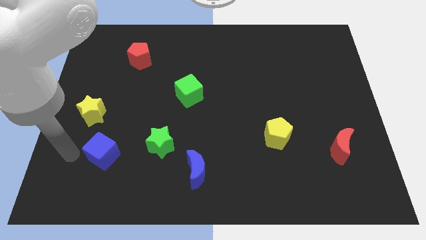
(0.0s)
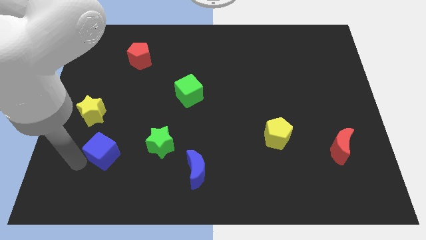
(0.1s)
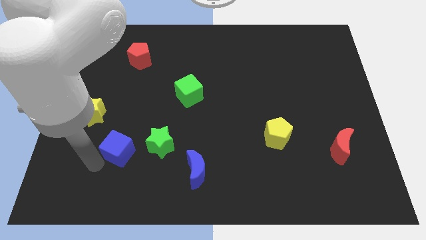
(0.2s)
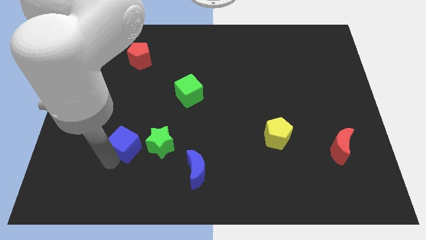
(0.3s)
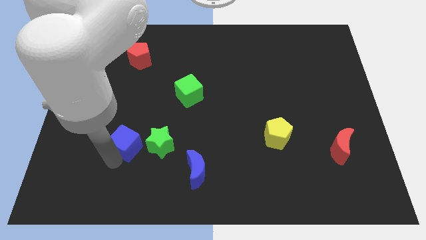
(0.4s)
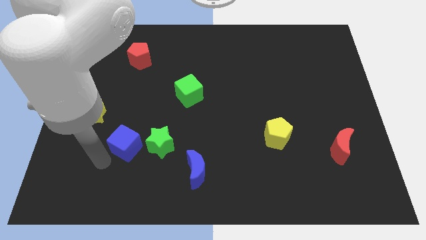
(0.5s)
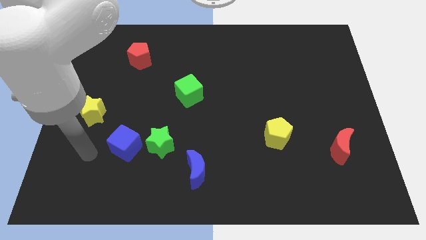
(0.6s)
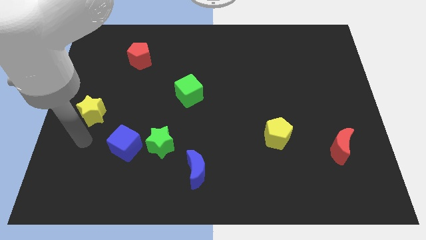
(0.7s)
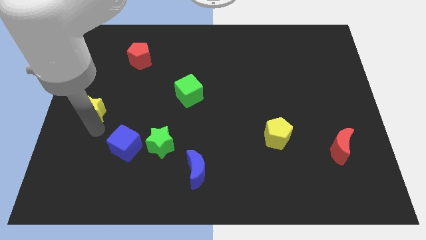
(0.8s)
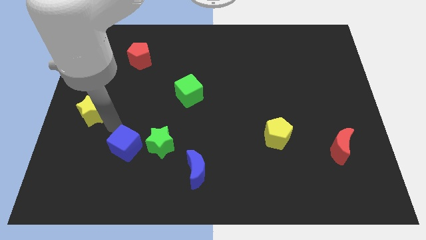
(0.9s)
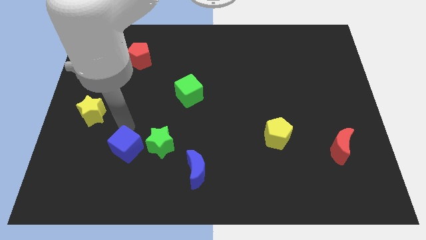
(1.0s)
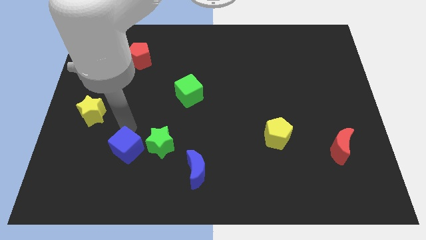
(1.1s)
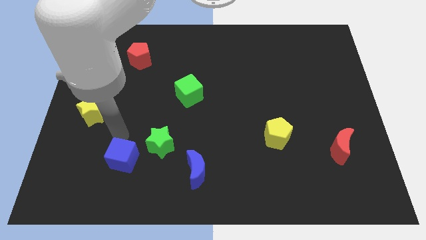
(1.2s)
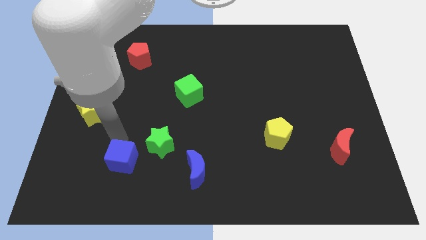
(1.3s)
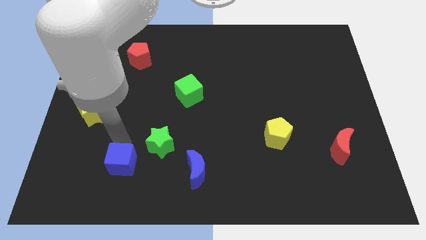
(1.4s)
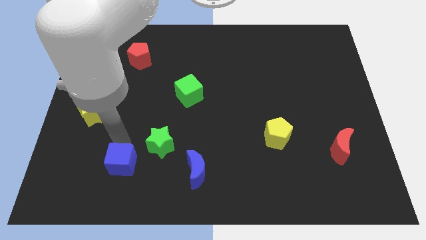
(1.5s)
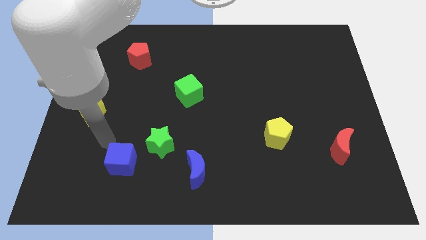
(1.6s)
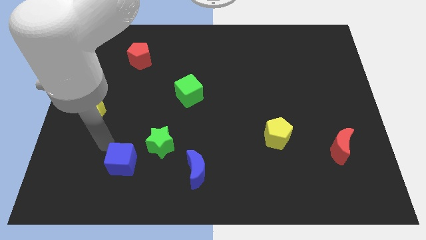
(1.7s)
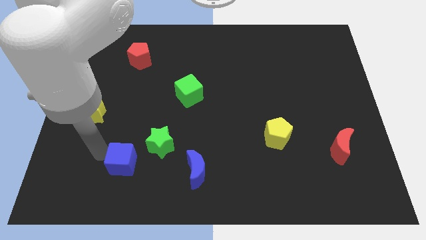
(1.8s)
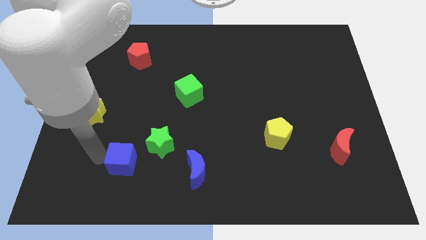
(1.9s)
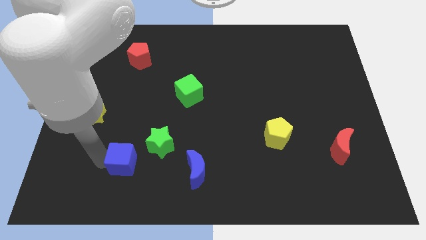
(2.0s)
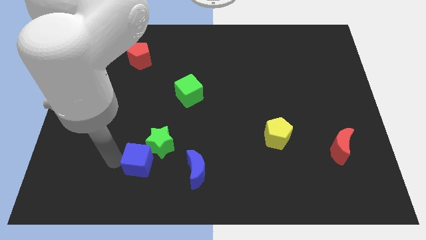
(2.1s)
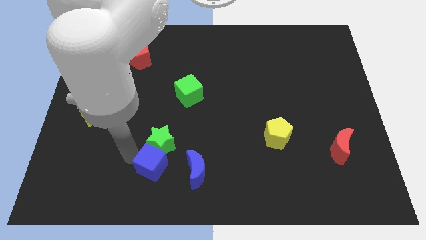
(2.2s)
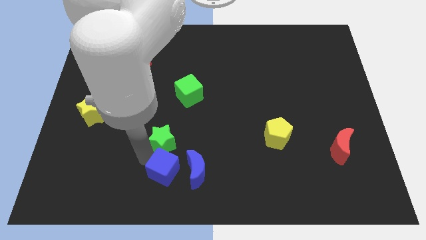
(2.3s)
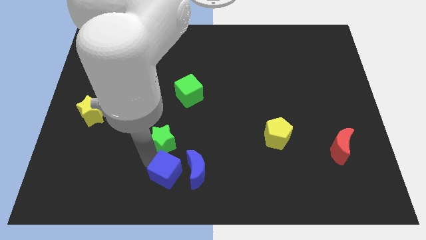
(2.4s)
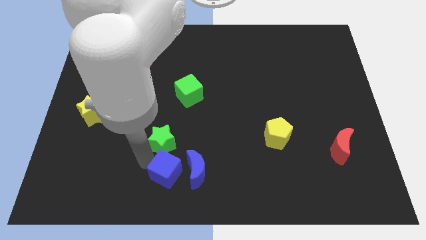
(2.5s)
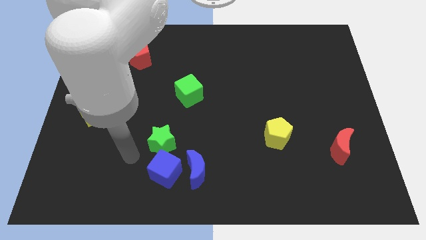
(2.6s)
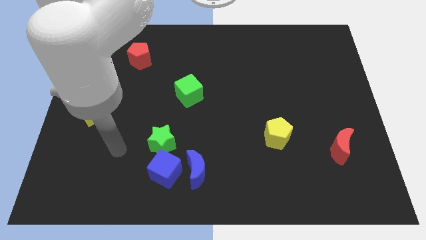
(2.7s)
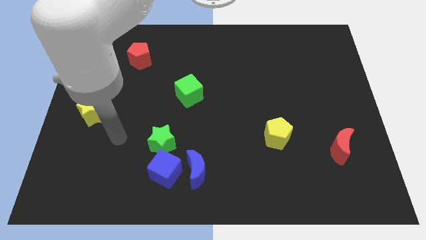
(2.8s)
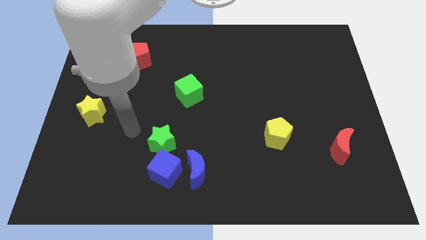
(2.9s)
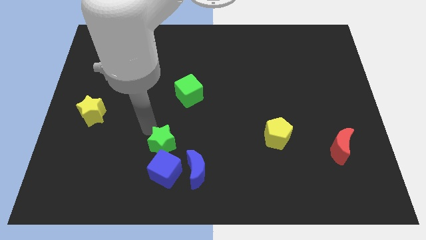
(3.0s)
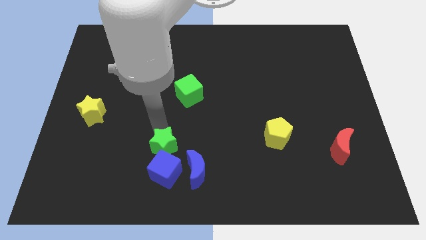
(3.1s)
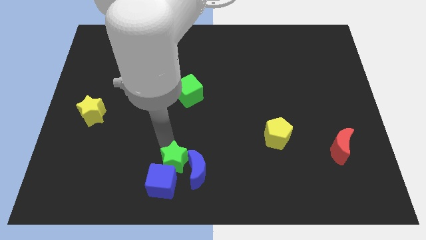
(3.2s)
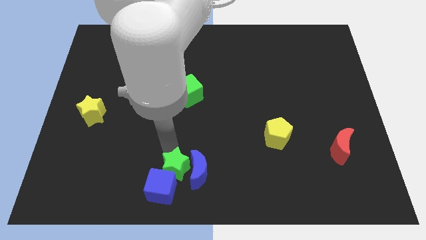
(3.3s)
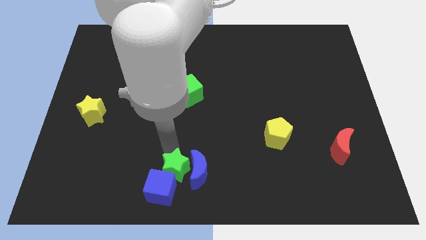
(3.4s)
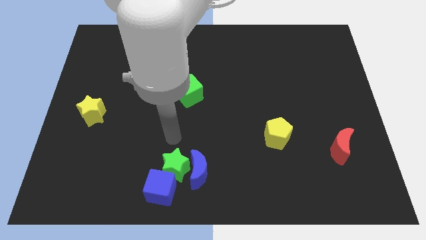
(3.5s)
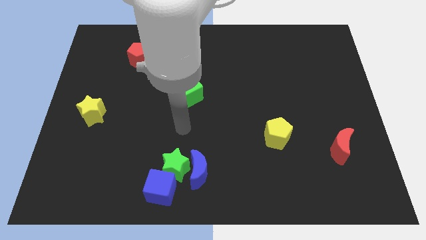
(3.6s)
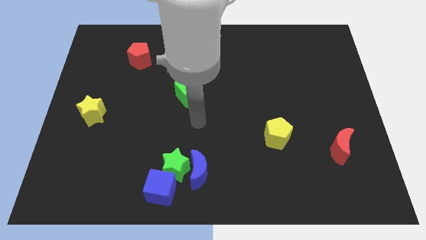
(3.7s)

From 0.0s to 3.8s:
push the blue cube with the green star towards bottom center of the board

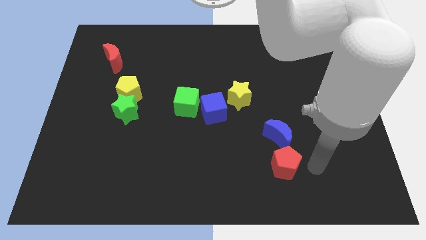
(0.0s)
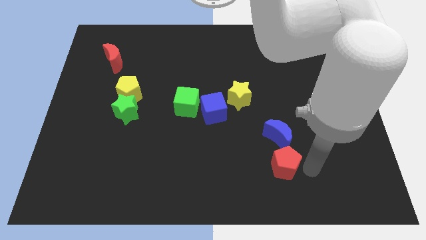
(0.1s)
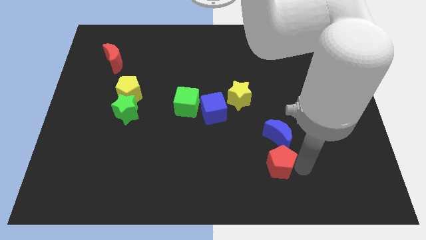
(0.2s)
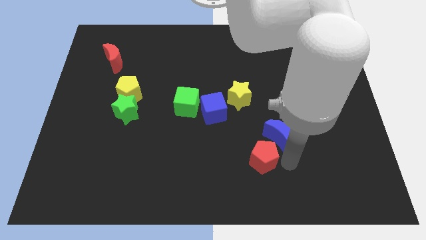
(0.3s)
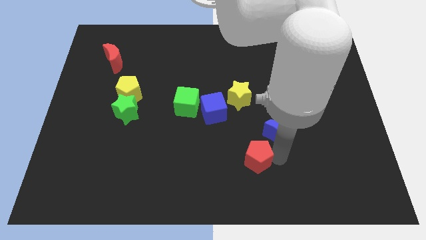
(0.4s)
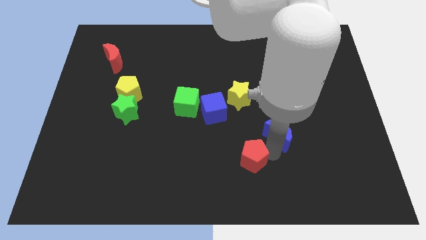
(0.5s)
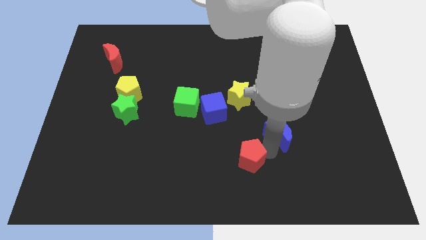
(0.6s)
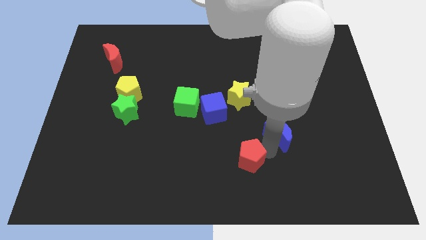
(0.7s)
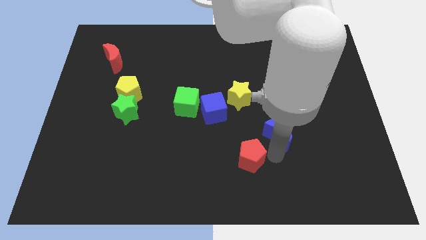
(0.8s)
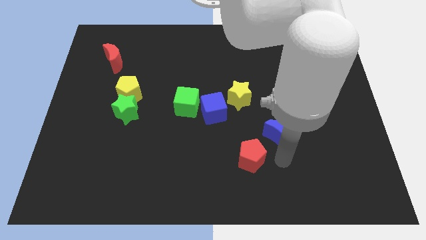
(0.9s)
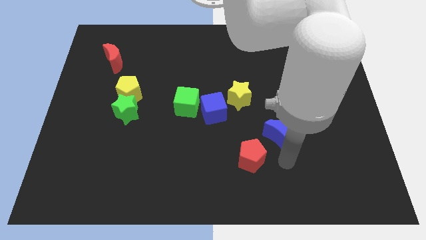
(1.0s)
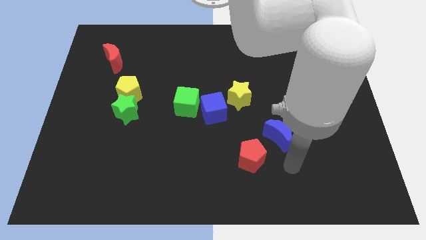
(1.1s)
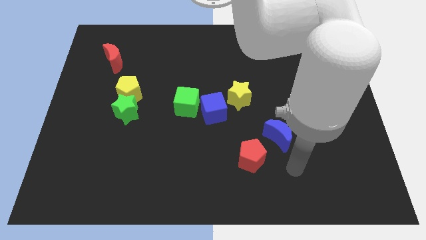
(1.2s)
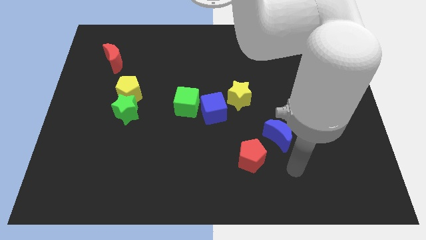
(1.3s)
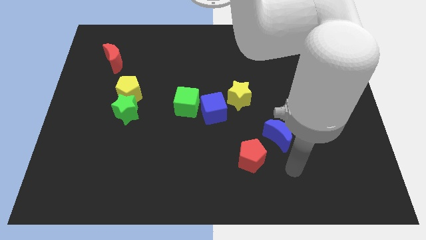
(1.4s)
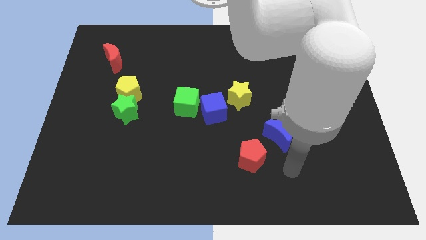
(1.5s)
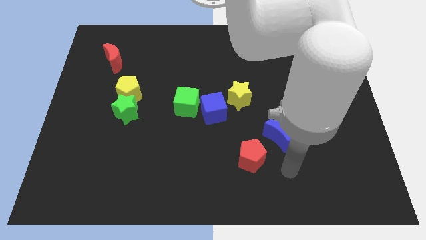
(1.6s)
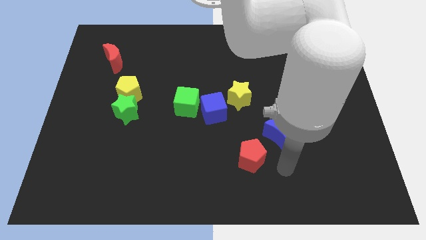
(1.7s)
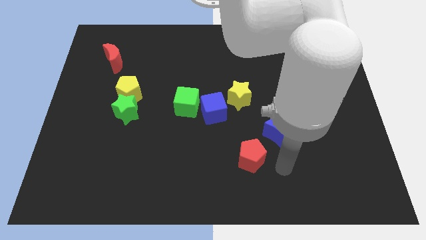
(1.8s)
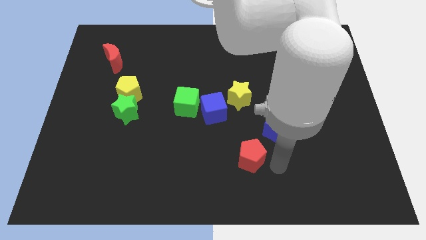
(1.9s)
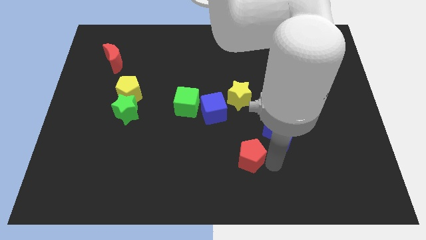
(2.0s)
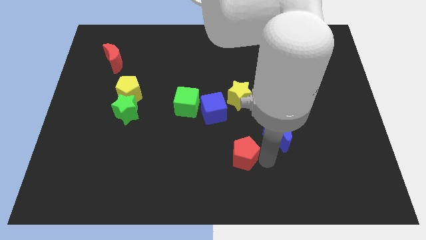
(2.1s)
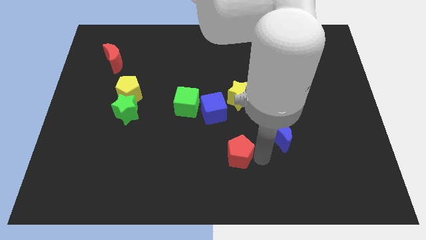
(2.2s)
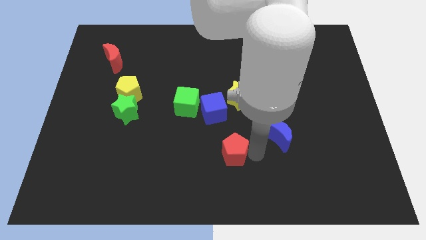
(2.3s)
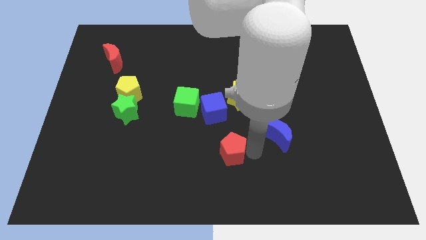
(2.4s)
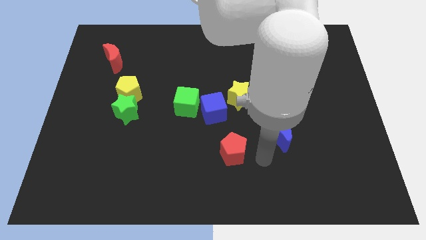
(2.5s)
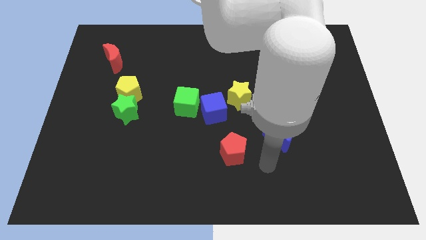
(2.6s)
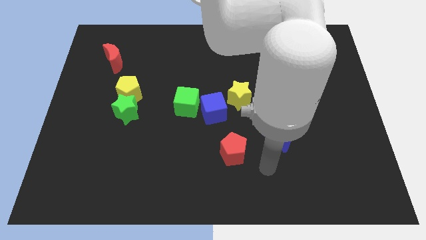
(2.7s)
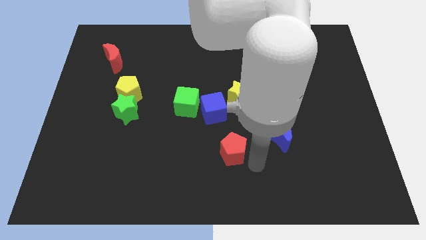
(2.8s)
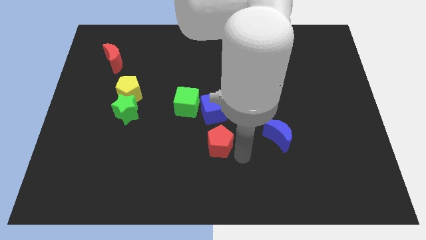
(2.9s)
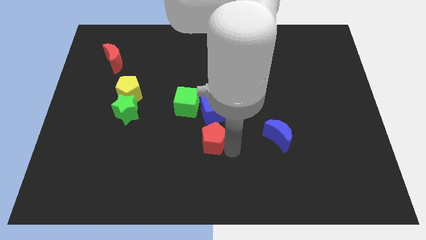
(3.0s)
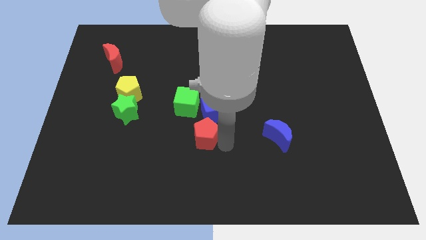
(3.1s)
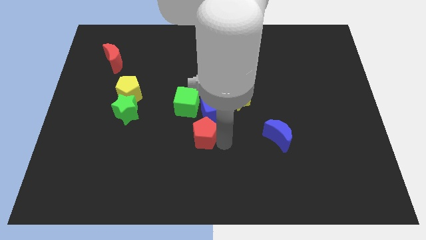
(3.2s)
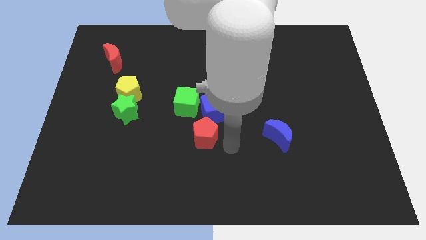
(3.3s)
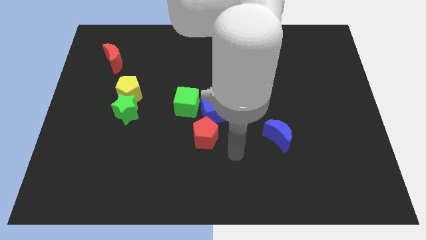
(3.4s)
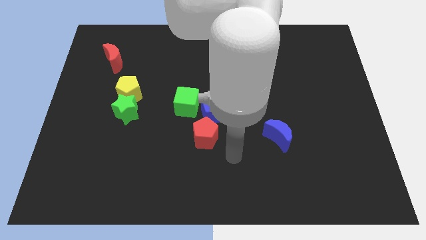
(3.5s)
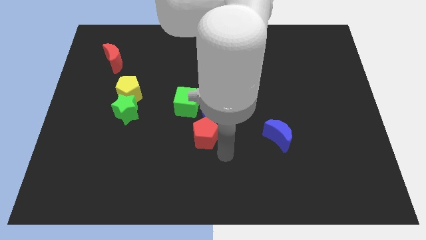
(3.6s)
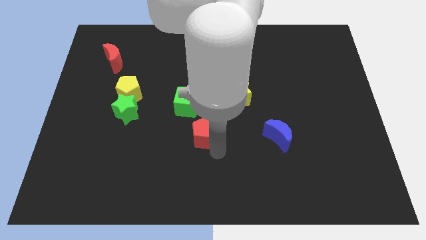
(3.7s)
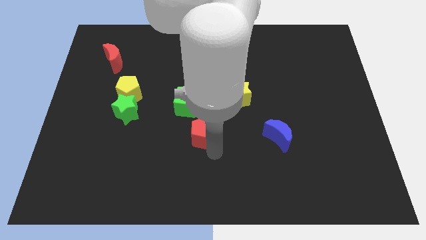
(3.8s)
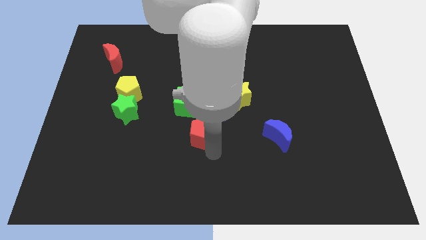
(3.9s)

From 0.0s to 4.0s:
push the red pentagon at the bottom of the green and blue cubes

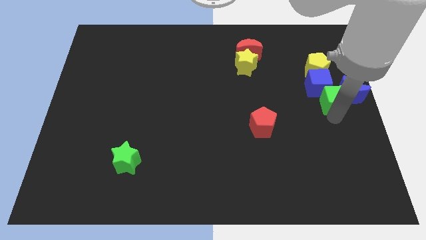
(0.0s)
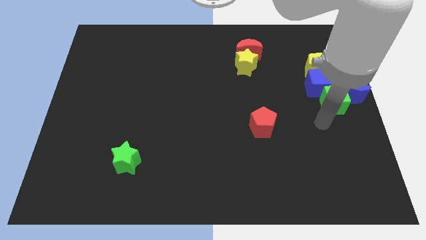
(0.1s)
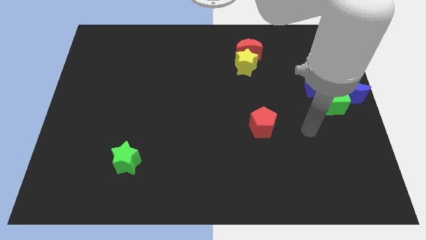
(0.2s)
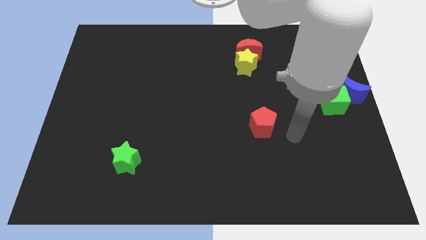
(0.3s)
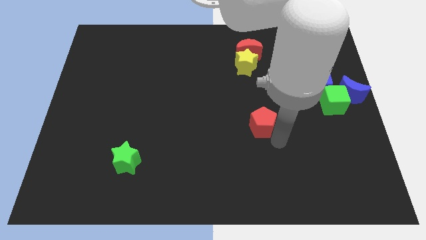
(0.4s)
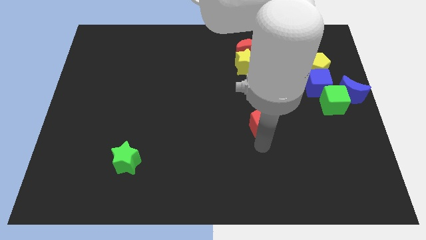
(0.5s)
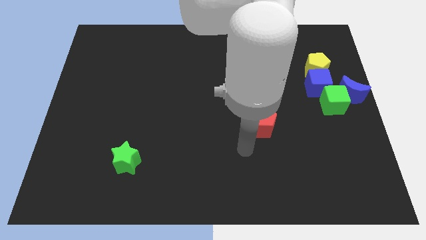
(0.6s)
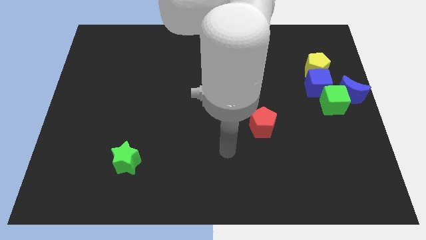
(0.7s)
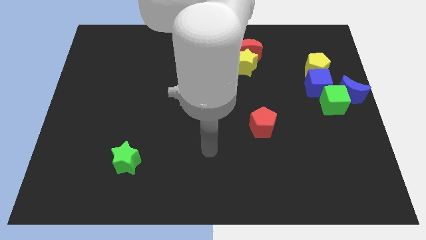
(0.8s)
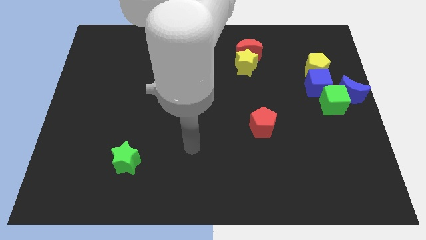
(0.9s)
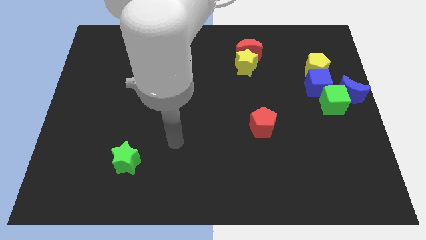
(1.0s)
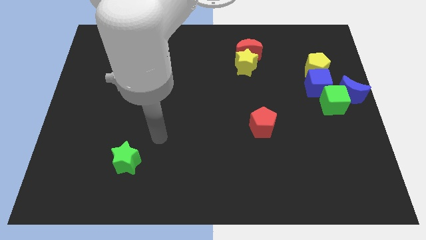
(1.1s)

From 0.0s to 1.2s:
move the arm away from the green cube

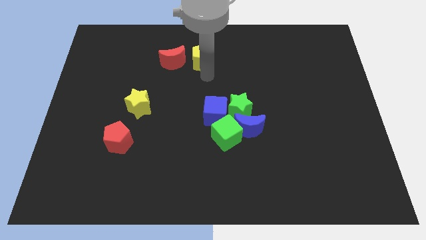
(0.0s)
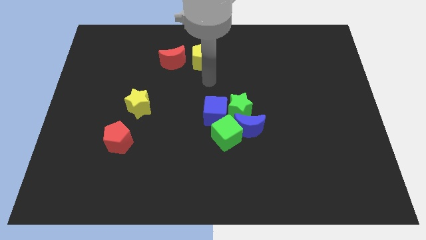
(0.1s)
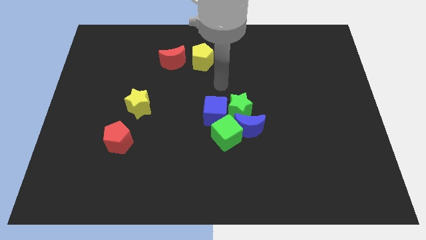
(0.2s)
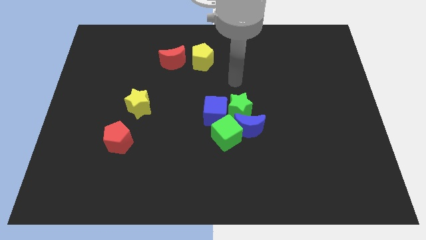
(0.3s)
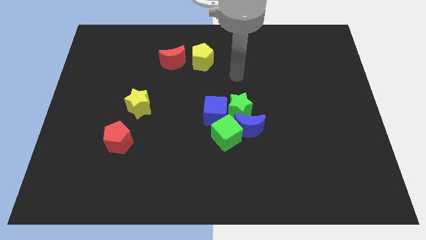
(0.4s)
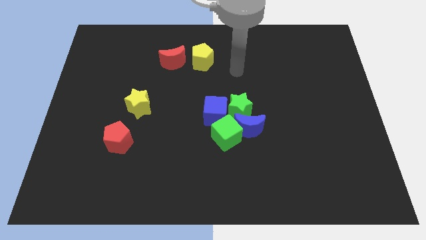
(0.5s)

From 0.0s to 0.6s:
move your arm away from yellow pentagon
